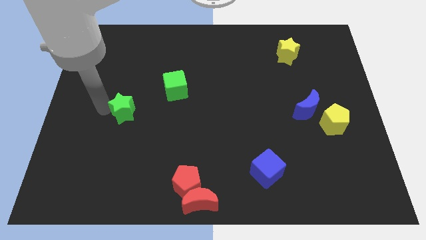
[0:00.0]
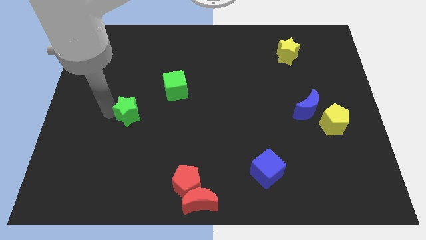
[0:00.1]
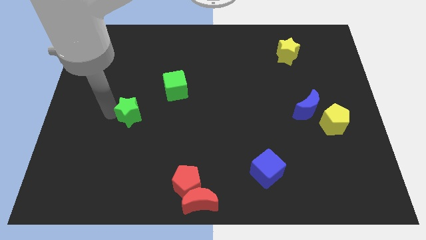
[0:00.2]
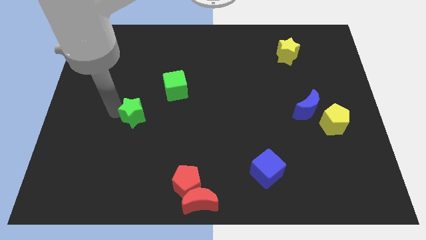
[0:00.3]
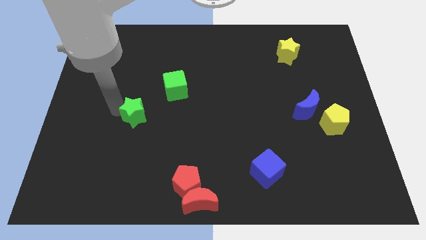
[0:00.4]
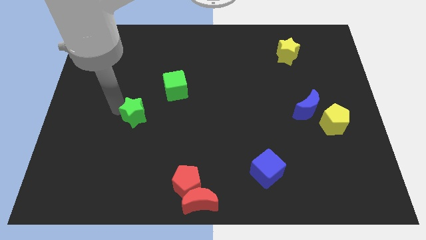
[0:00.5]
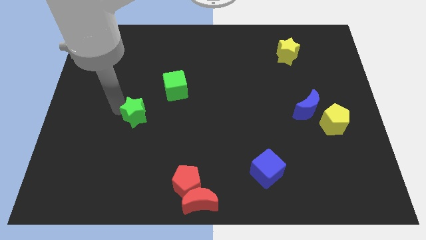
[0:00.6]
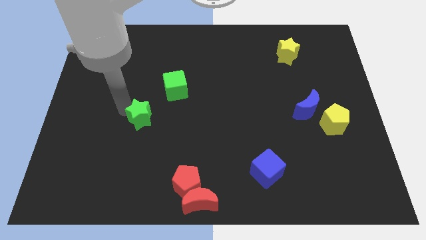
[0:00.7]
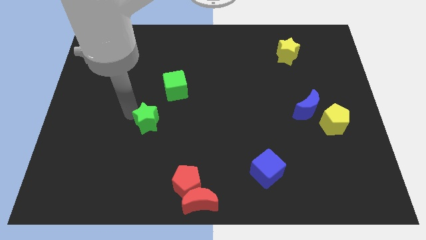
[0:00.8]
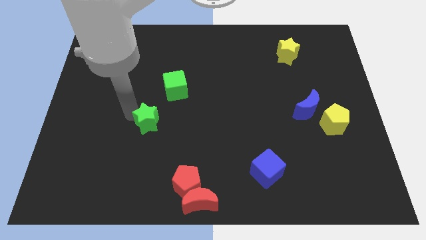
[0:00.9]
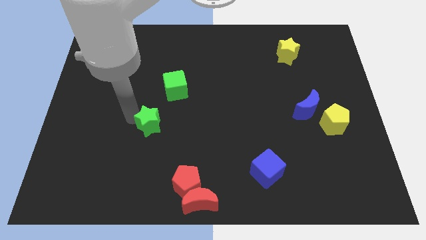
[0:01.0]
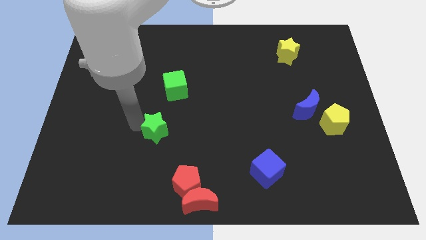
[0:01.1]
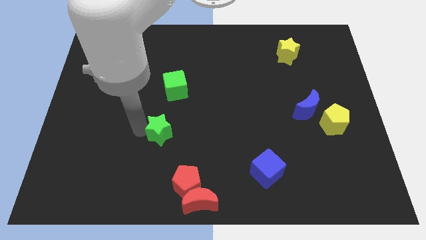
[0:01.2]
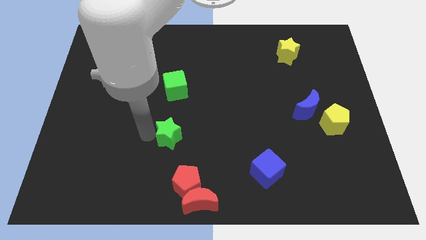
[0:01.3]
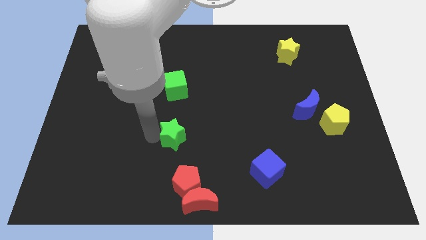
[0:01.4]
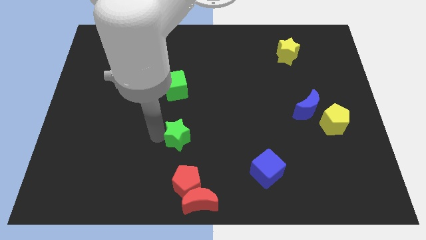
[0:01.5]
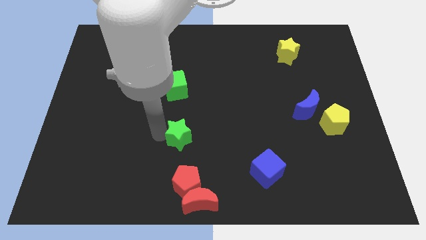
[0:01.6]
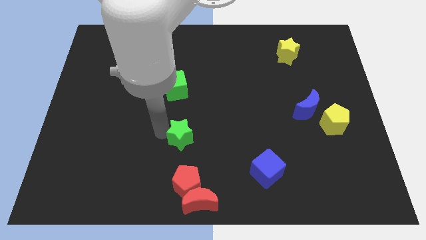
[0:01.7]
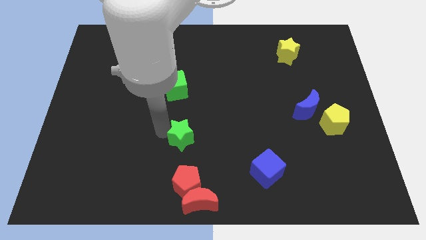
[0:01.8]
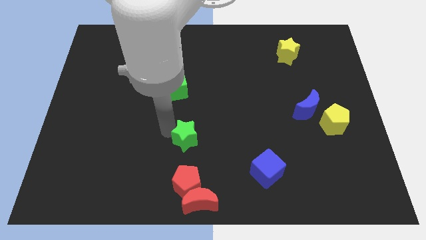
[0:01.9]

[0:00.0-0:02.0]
place the green star above the red pentagon

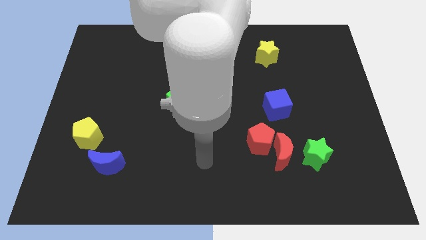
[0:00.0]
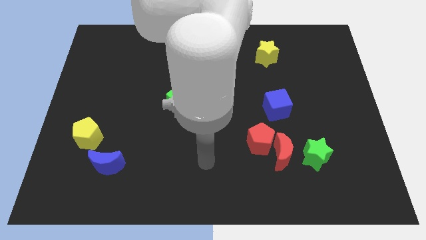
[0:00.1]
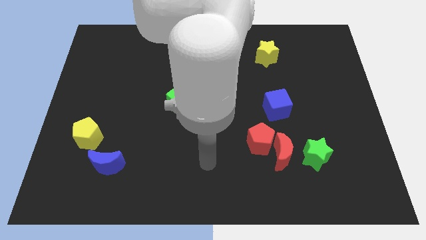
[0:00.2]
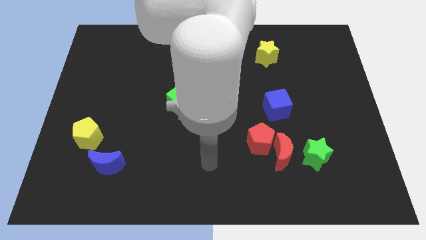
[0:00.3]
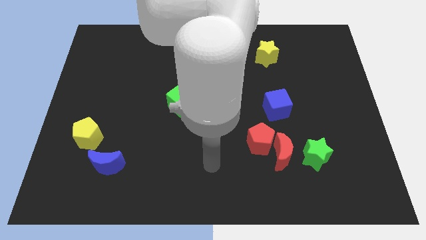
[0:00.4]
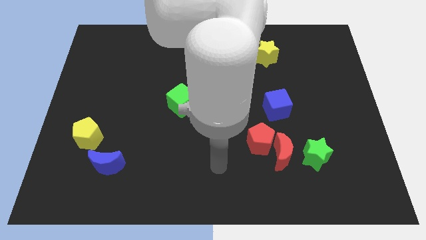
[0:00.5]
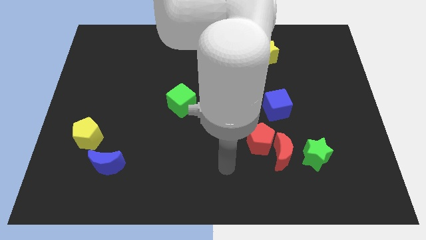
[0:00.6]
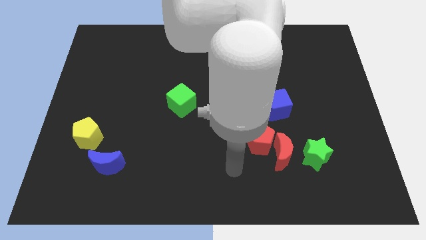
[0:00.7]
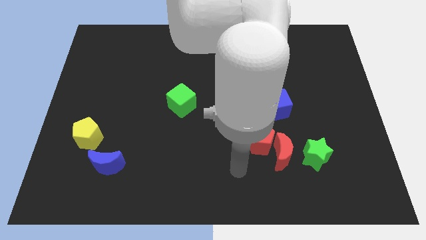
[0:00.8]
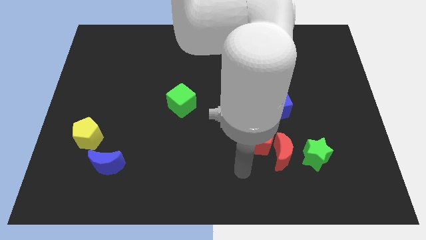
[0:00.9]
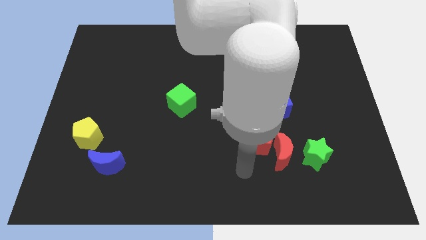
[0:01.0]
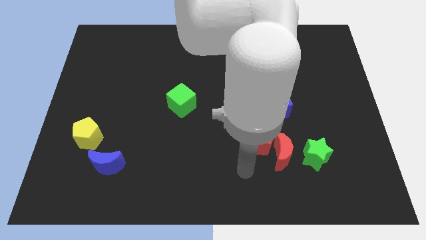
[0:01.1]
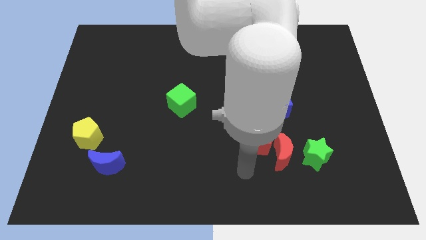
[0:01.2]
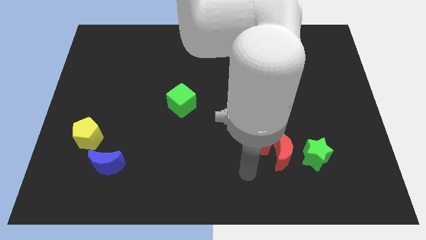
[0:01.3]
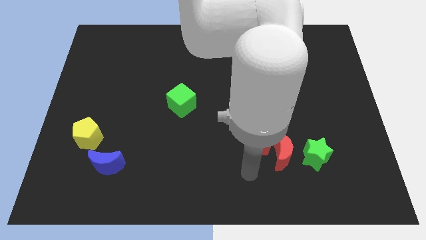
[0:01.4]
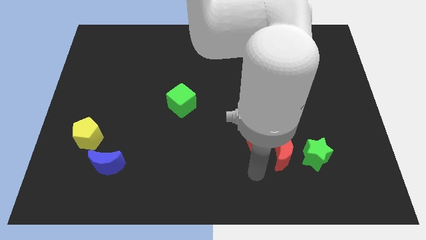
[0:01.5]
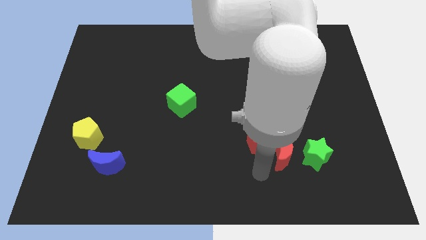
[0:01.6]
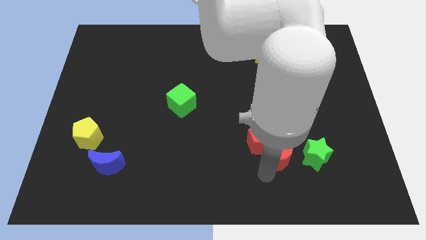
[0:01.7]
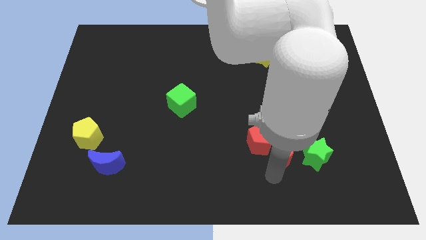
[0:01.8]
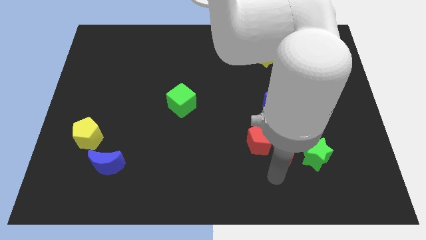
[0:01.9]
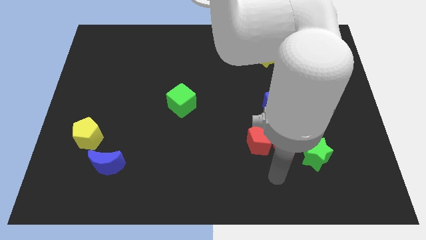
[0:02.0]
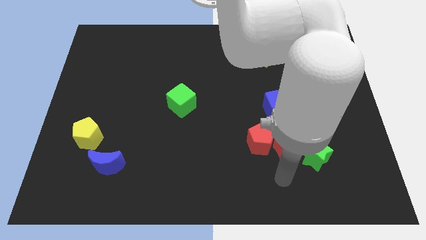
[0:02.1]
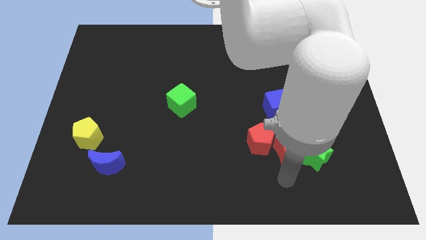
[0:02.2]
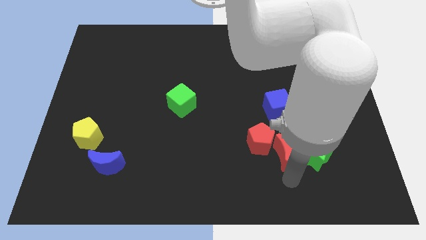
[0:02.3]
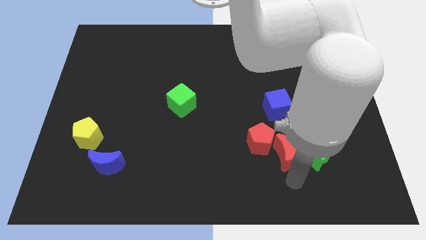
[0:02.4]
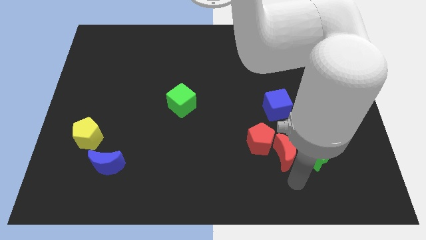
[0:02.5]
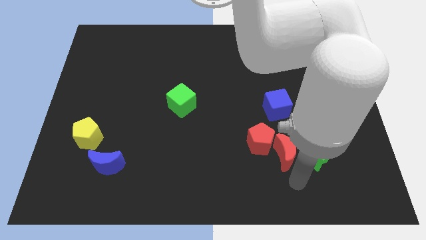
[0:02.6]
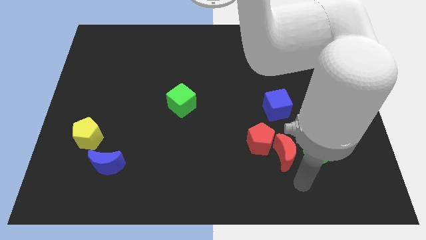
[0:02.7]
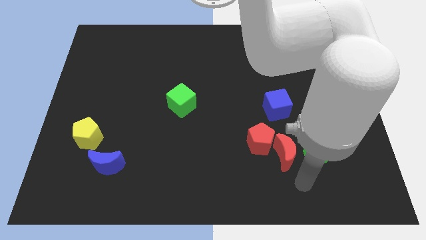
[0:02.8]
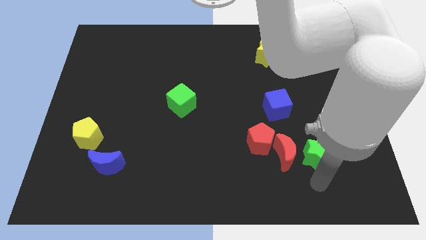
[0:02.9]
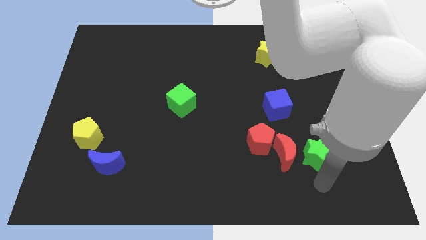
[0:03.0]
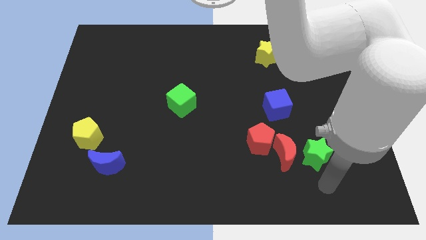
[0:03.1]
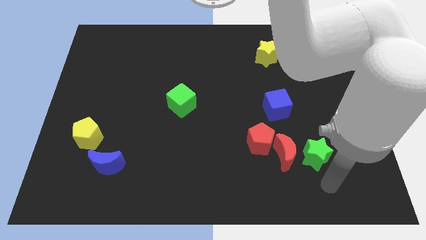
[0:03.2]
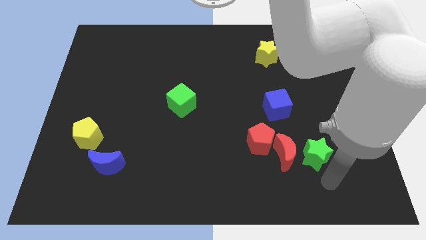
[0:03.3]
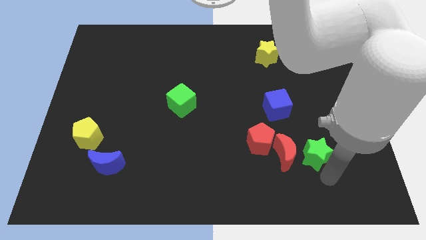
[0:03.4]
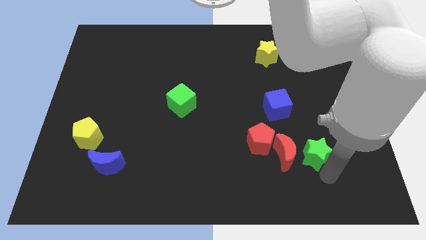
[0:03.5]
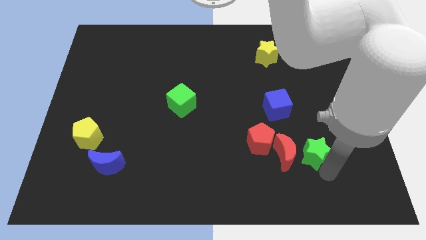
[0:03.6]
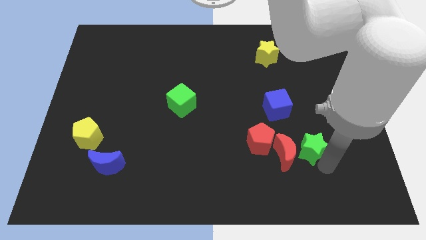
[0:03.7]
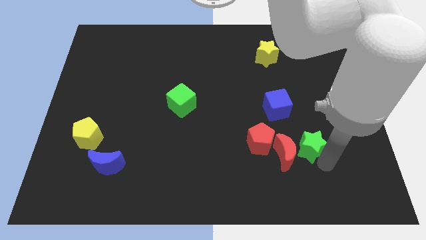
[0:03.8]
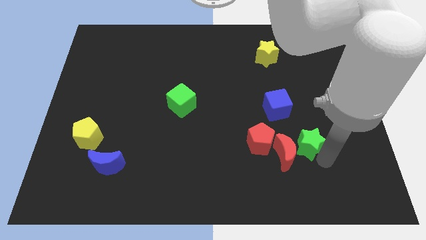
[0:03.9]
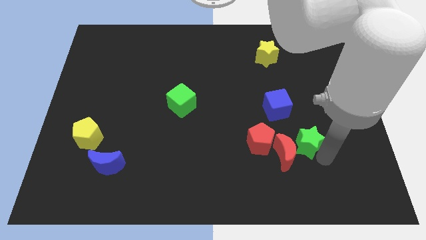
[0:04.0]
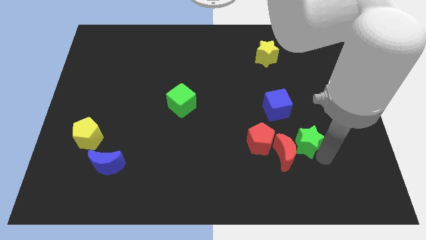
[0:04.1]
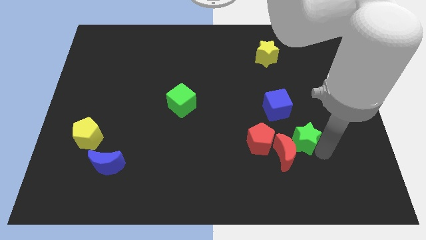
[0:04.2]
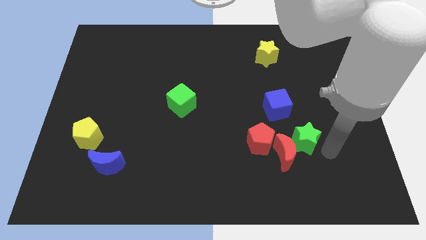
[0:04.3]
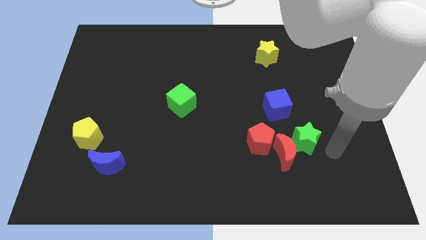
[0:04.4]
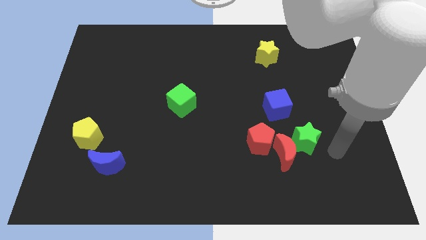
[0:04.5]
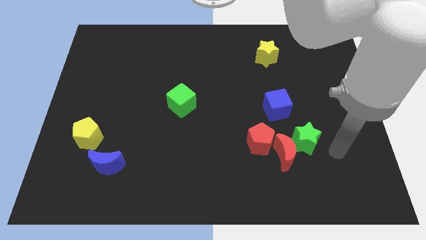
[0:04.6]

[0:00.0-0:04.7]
push the green star to the top right side of the red moon

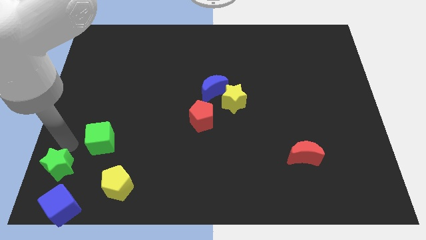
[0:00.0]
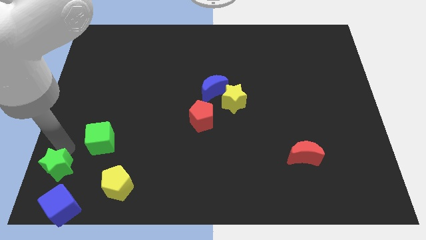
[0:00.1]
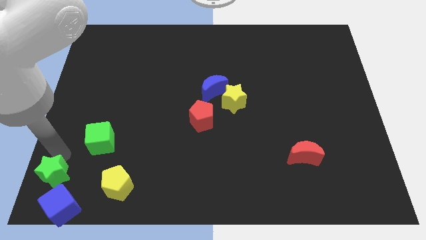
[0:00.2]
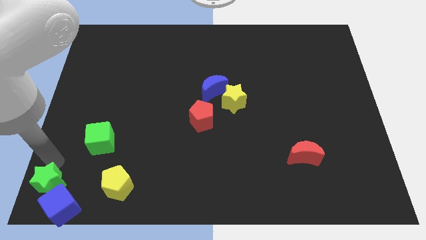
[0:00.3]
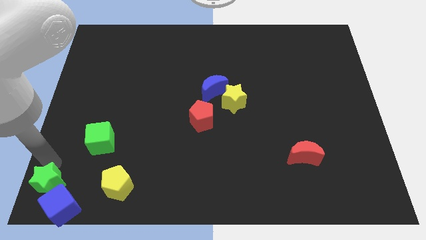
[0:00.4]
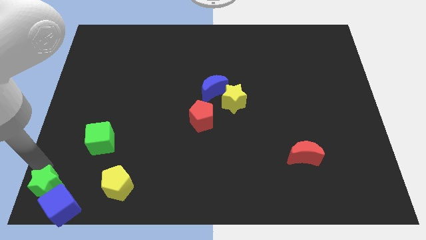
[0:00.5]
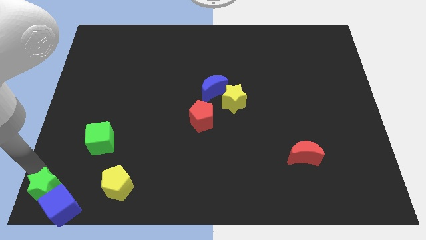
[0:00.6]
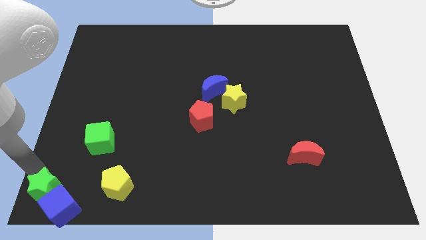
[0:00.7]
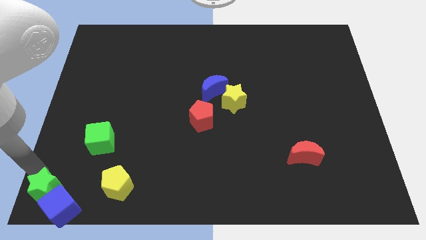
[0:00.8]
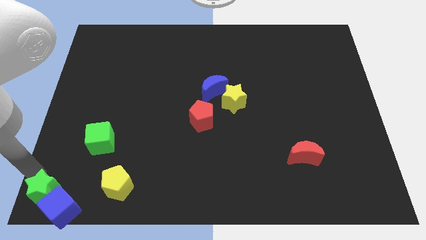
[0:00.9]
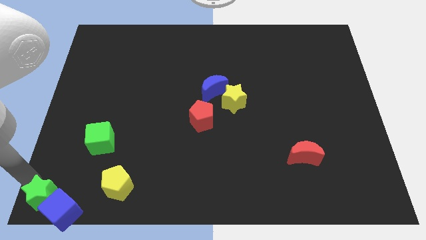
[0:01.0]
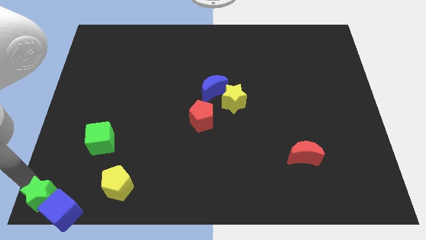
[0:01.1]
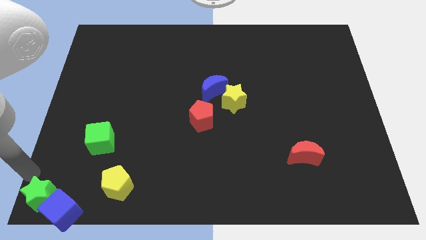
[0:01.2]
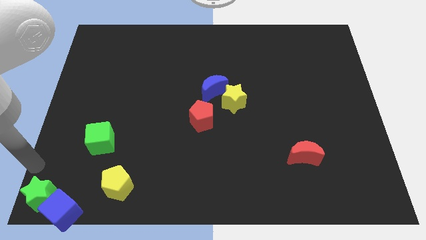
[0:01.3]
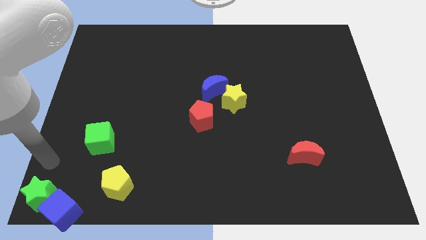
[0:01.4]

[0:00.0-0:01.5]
push the green star towards the bottom left corner of the board

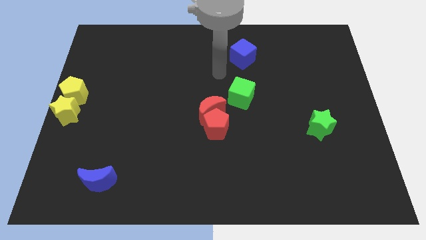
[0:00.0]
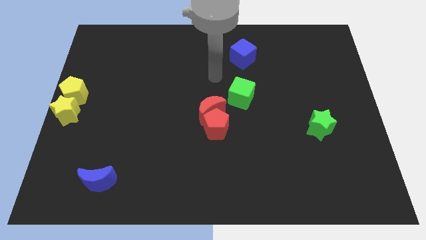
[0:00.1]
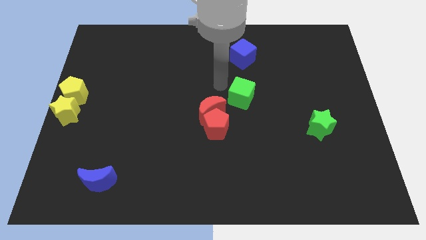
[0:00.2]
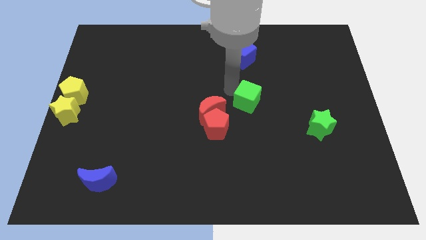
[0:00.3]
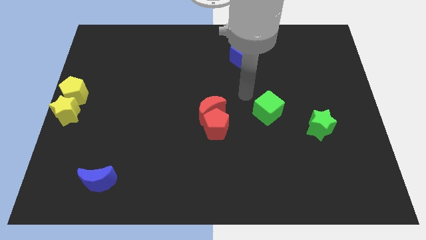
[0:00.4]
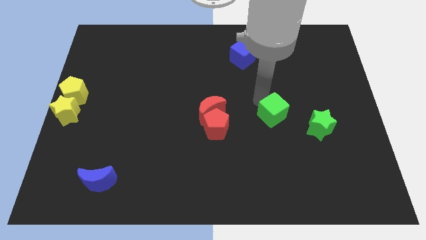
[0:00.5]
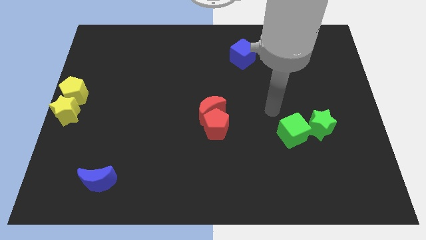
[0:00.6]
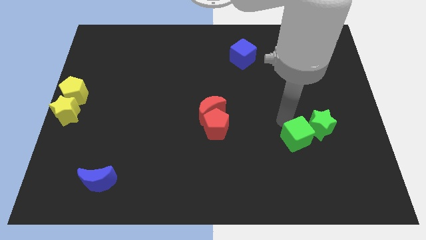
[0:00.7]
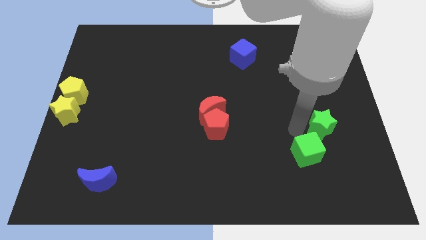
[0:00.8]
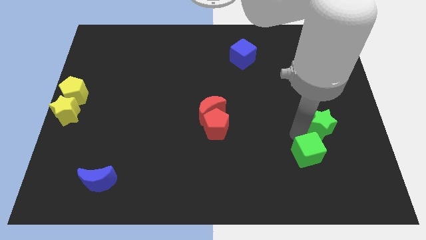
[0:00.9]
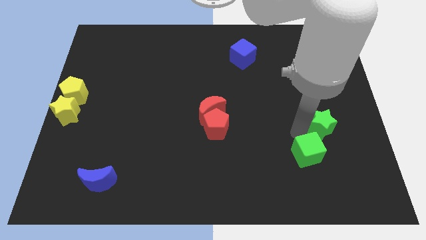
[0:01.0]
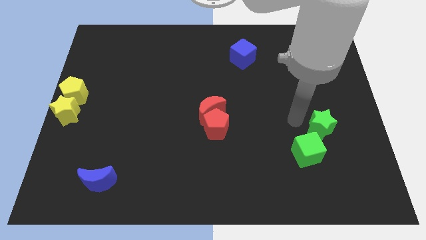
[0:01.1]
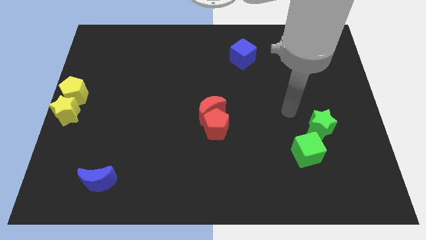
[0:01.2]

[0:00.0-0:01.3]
move the green cube to the bottom left of the green star
